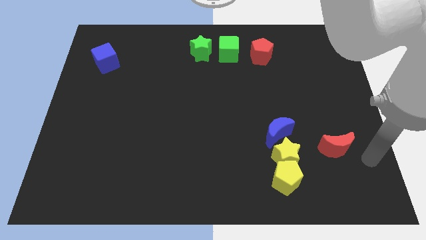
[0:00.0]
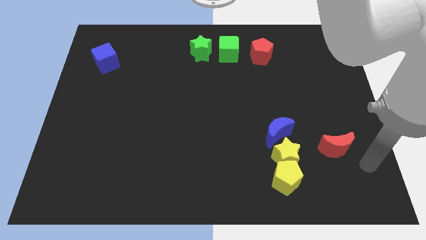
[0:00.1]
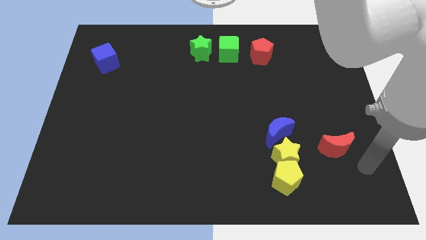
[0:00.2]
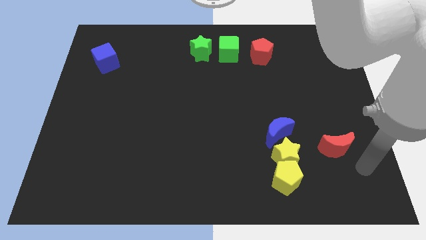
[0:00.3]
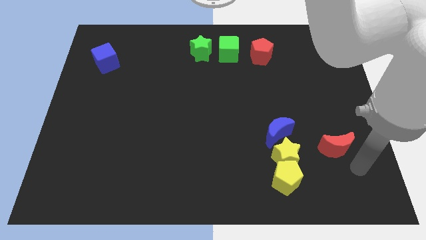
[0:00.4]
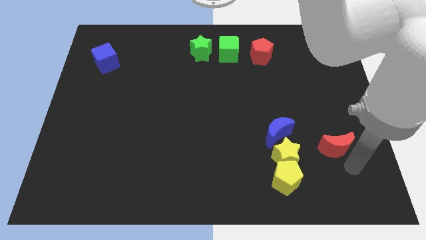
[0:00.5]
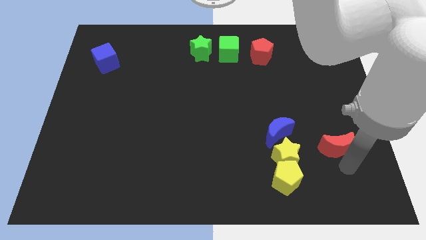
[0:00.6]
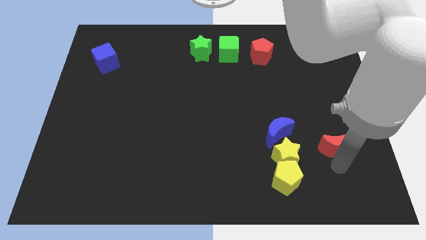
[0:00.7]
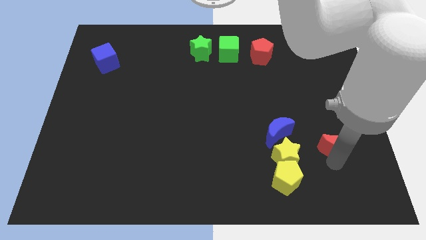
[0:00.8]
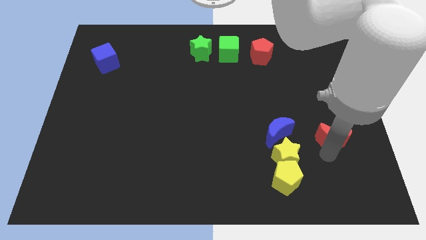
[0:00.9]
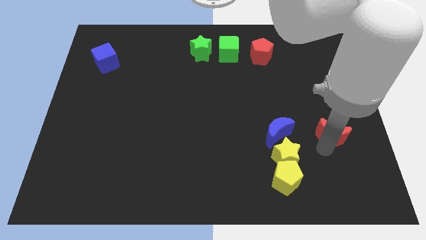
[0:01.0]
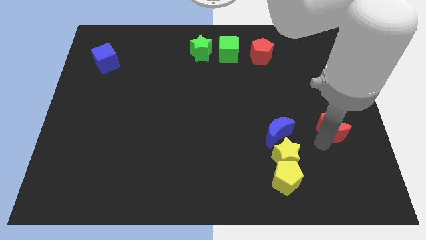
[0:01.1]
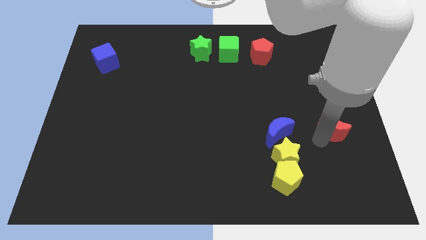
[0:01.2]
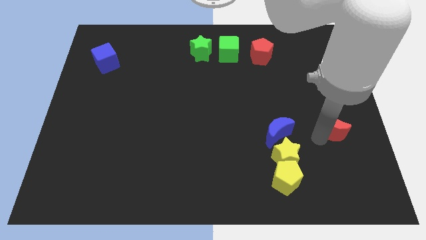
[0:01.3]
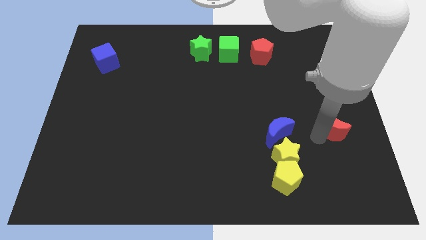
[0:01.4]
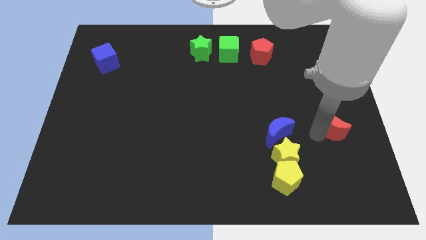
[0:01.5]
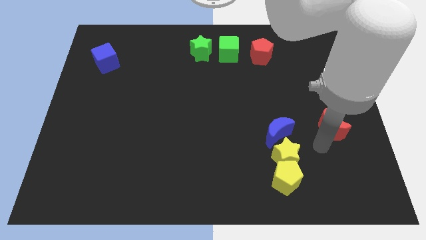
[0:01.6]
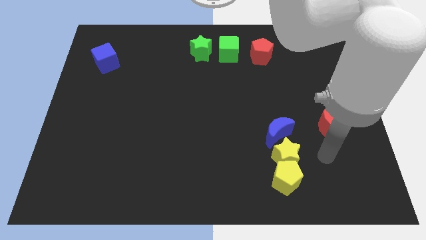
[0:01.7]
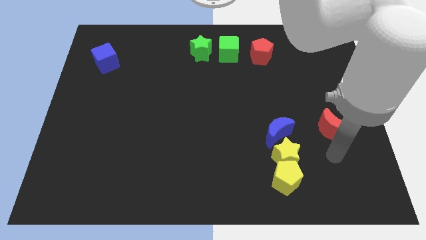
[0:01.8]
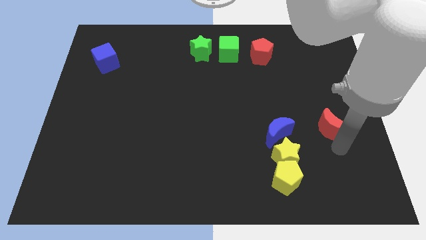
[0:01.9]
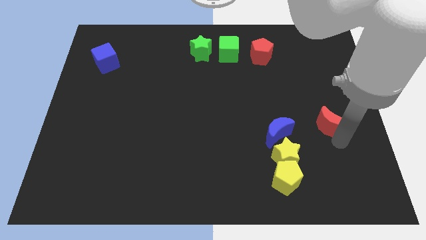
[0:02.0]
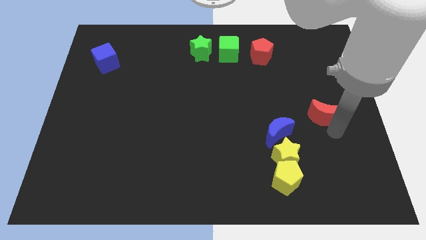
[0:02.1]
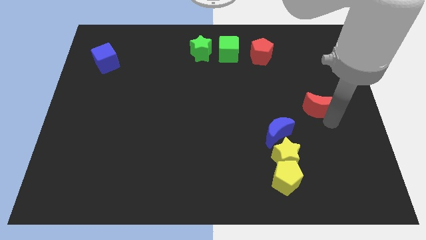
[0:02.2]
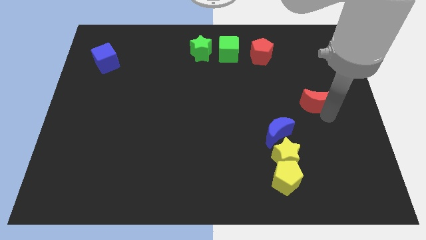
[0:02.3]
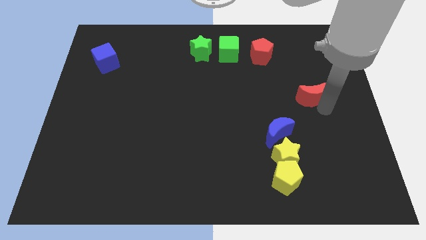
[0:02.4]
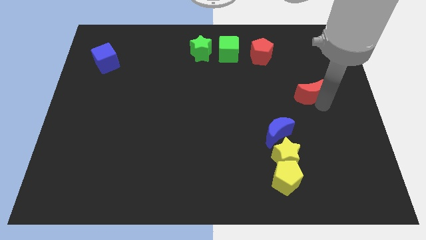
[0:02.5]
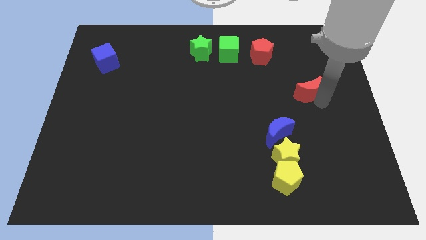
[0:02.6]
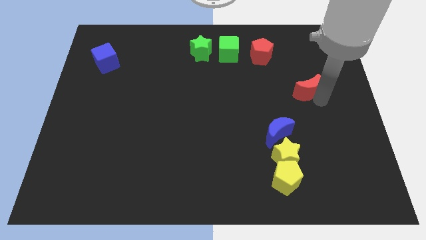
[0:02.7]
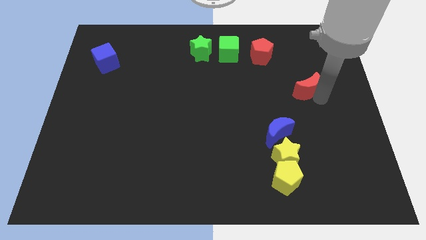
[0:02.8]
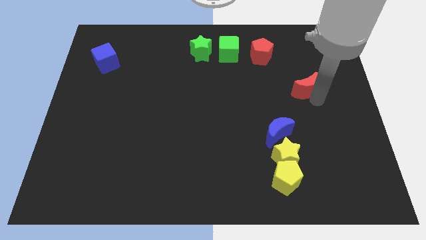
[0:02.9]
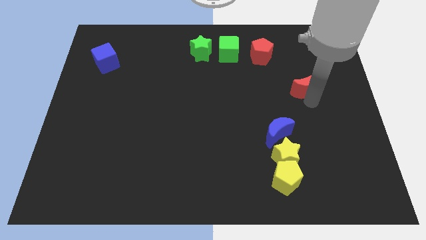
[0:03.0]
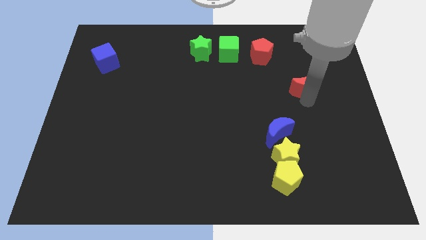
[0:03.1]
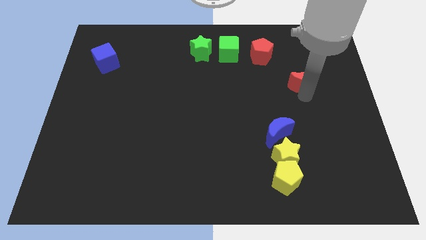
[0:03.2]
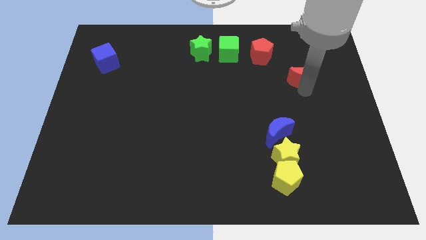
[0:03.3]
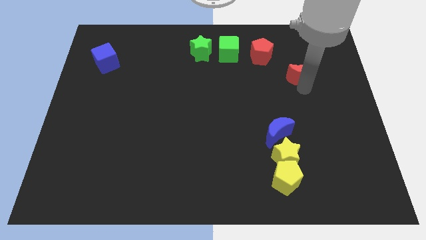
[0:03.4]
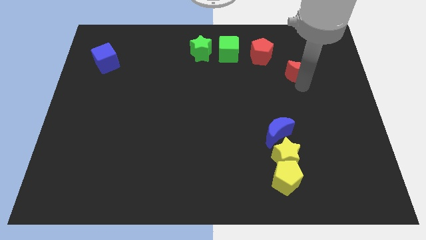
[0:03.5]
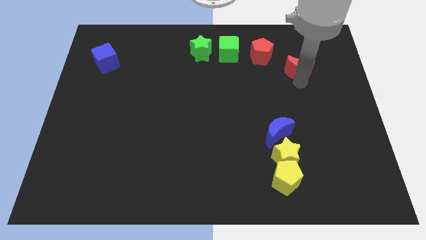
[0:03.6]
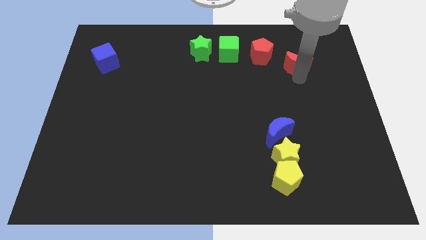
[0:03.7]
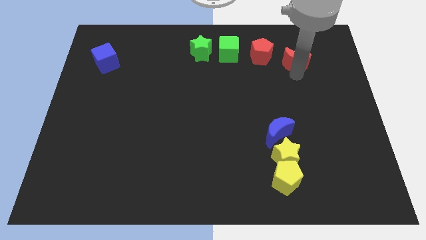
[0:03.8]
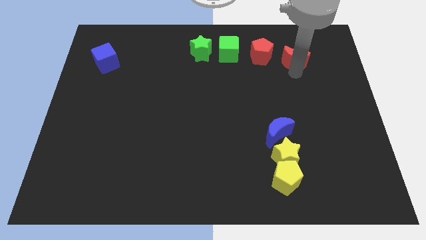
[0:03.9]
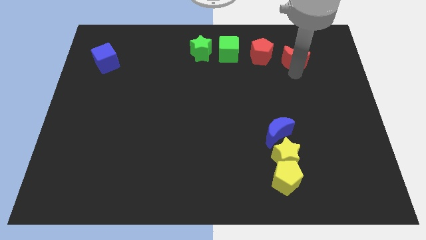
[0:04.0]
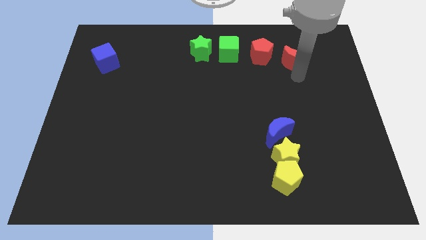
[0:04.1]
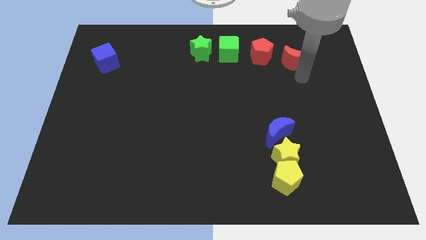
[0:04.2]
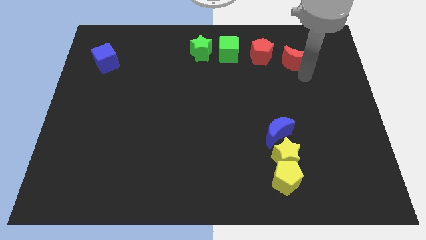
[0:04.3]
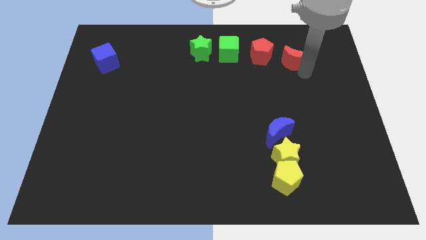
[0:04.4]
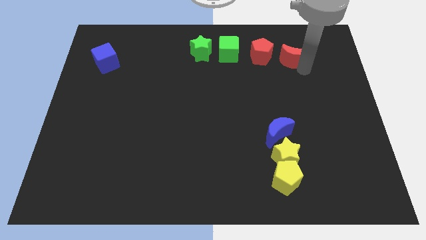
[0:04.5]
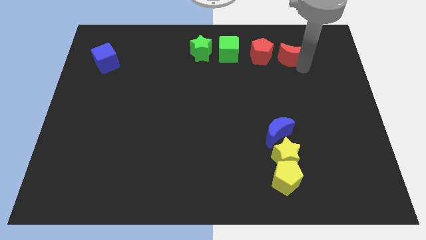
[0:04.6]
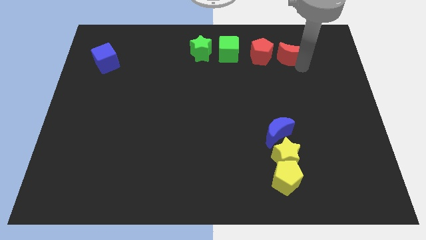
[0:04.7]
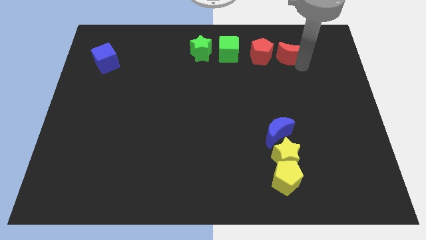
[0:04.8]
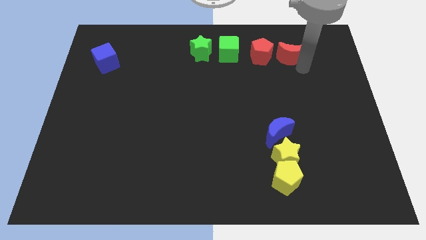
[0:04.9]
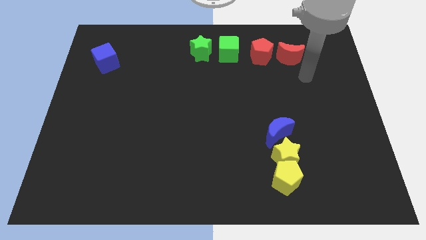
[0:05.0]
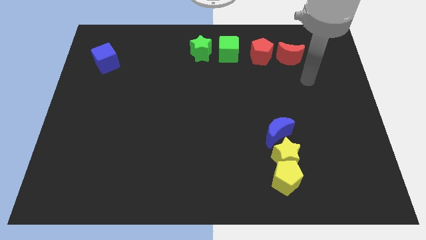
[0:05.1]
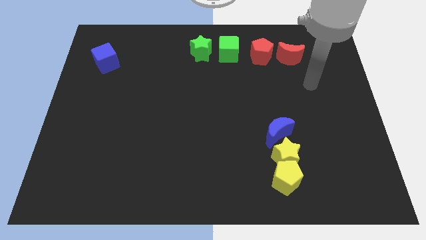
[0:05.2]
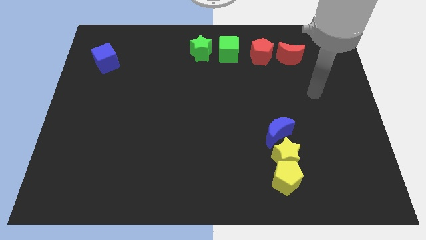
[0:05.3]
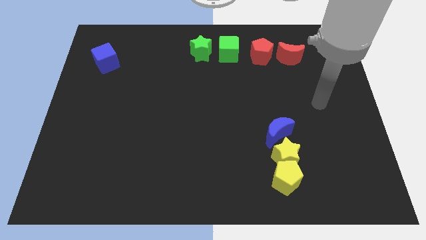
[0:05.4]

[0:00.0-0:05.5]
push the red moon to the right side of the red pentagon

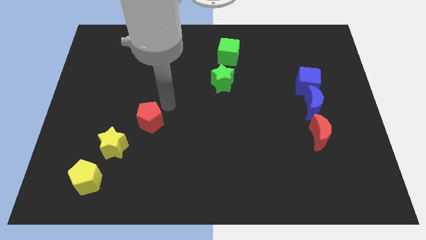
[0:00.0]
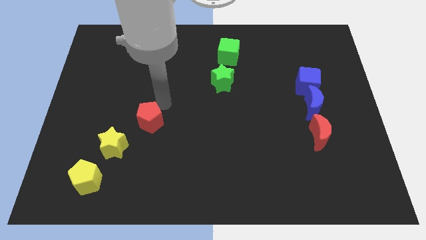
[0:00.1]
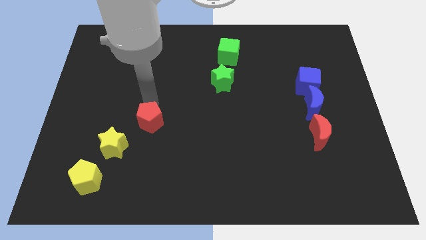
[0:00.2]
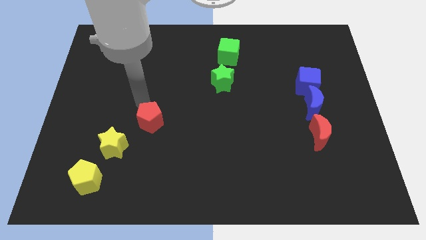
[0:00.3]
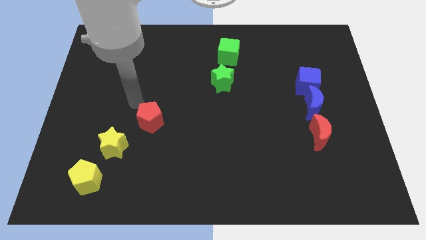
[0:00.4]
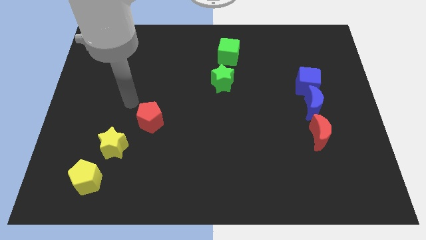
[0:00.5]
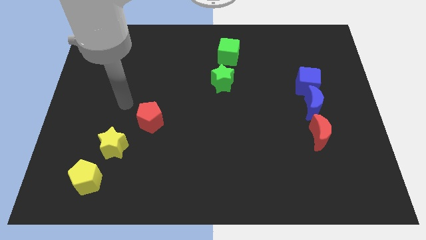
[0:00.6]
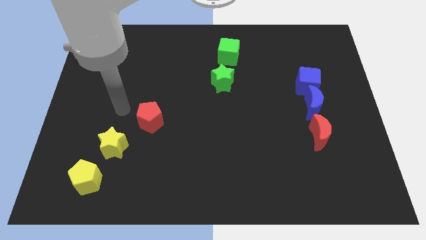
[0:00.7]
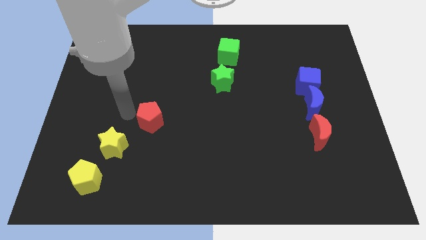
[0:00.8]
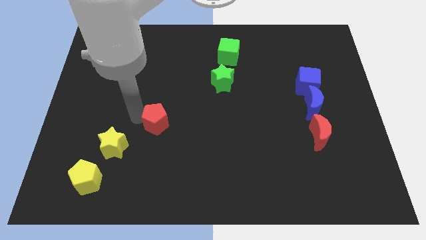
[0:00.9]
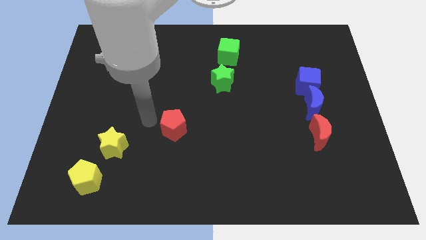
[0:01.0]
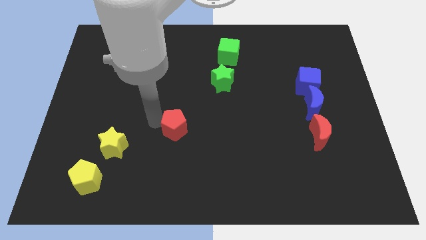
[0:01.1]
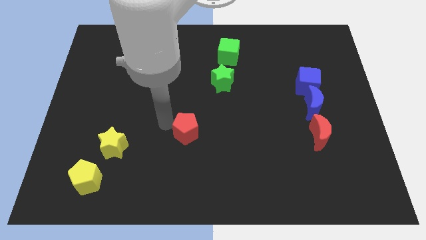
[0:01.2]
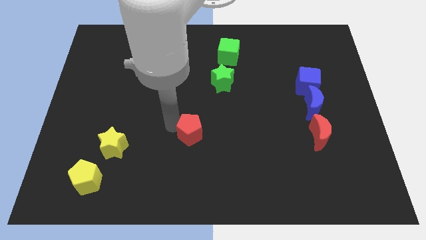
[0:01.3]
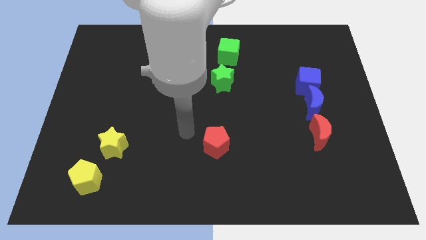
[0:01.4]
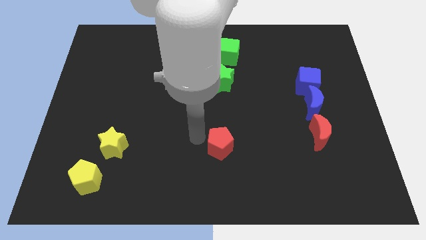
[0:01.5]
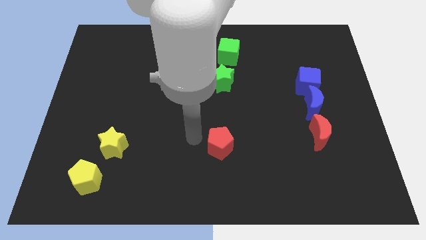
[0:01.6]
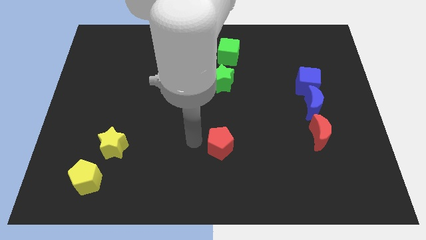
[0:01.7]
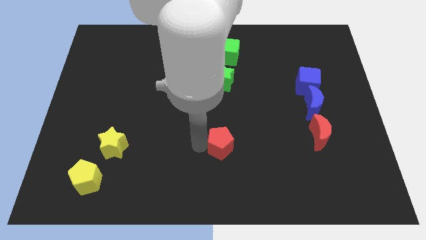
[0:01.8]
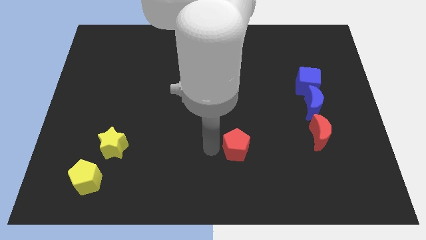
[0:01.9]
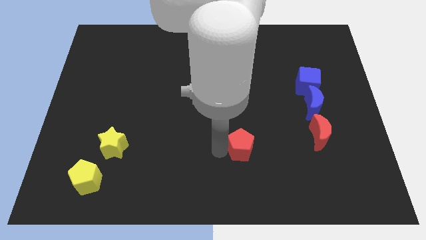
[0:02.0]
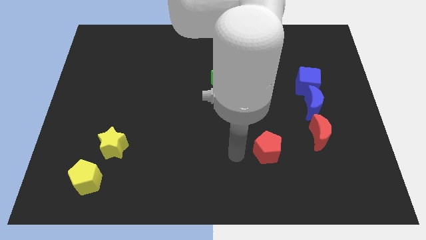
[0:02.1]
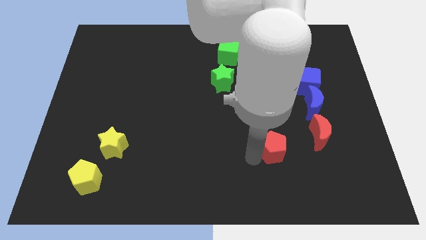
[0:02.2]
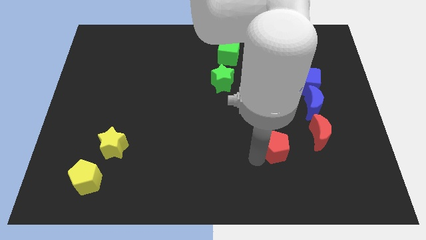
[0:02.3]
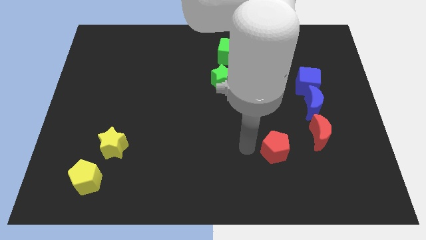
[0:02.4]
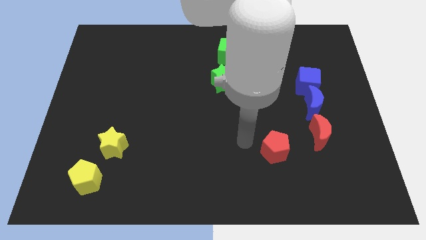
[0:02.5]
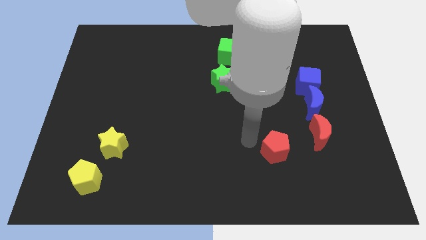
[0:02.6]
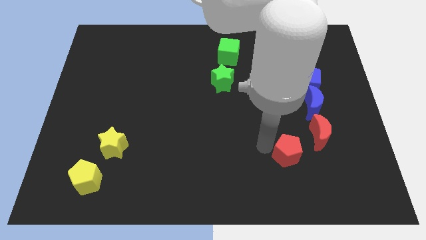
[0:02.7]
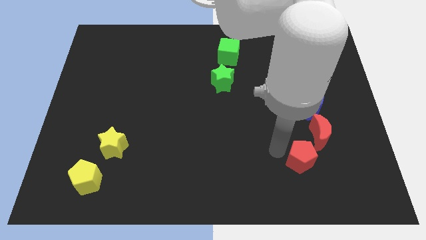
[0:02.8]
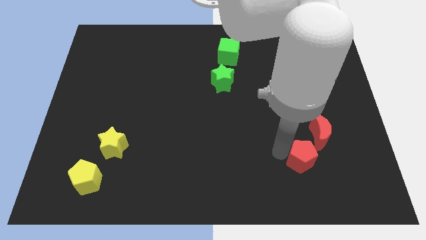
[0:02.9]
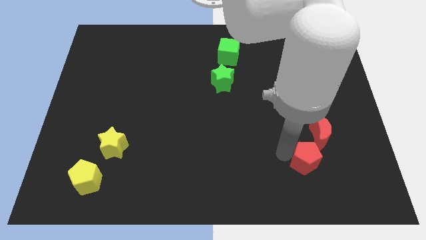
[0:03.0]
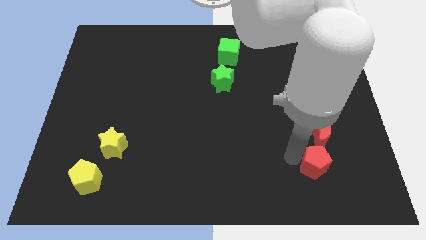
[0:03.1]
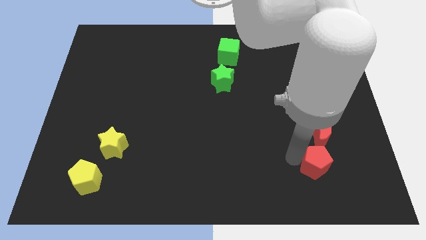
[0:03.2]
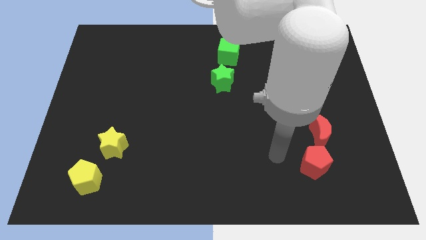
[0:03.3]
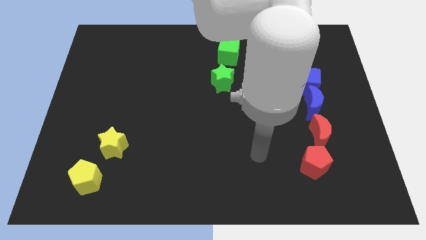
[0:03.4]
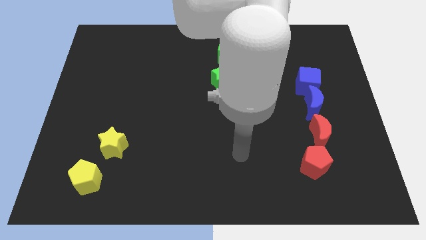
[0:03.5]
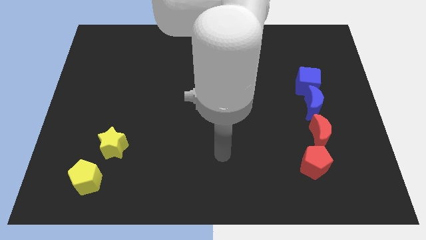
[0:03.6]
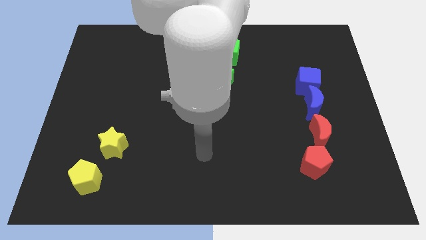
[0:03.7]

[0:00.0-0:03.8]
place red pentagon at the bottom of red moon
